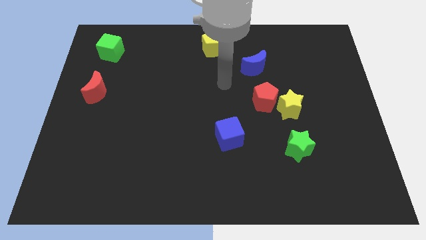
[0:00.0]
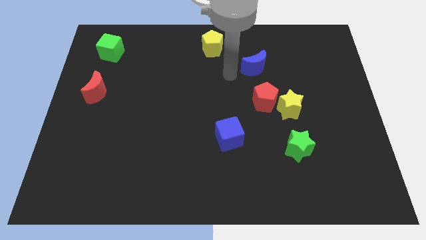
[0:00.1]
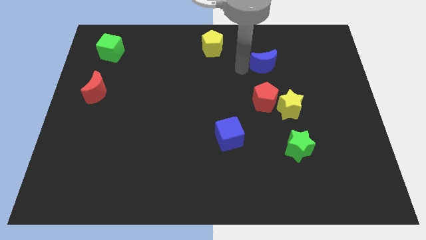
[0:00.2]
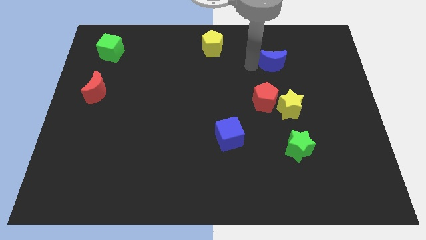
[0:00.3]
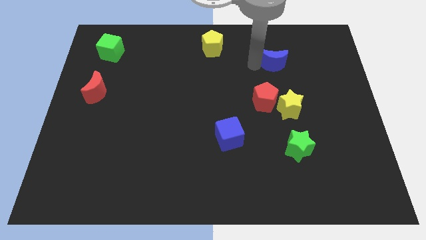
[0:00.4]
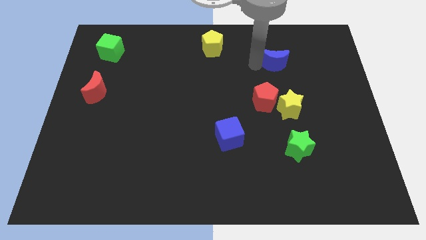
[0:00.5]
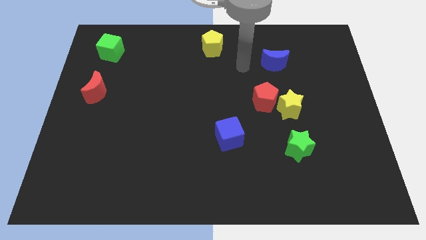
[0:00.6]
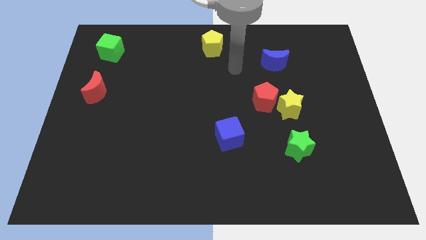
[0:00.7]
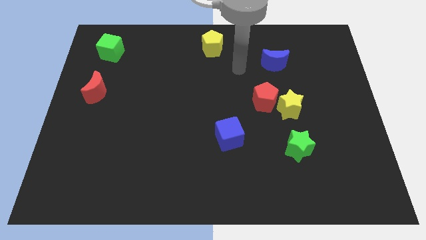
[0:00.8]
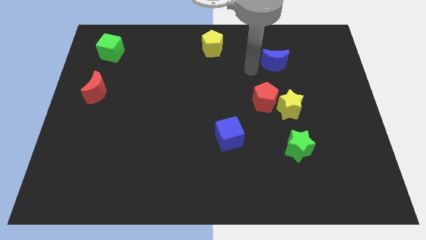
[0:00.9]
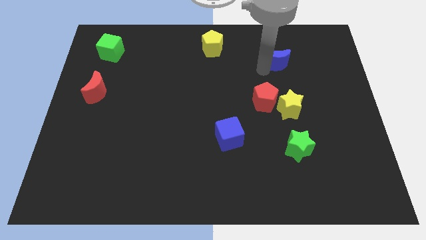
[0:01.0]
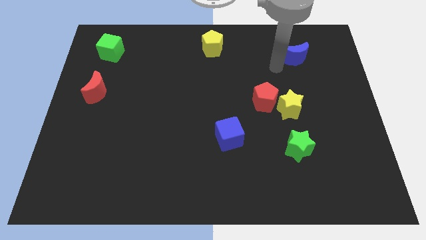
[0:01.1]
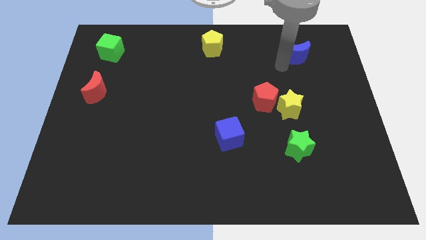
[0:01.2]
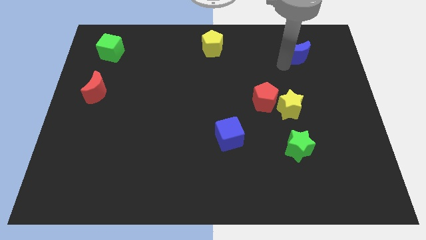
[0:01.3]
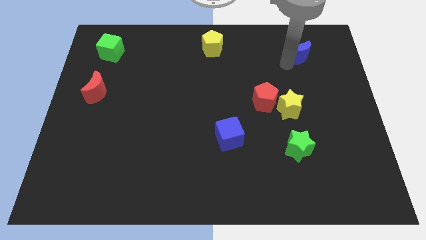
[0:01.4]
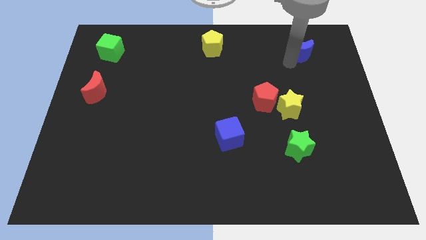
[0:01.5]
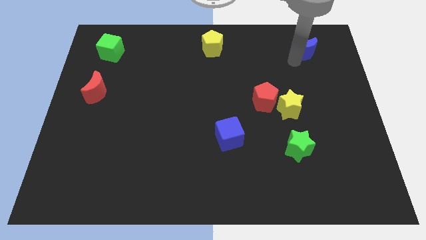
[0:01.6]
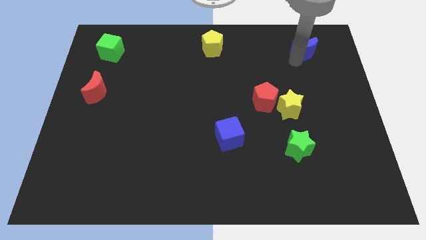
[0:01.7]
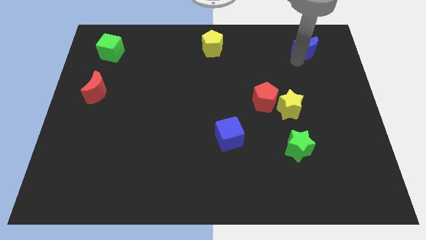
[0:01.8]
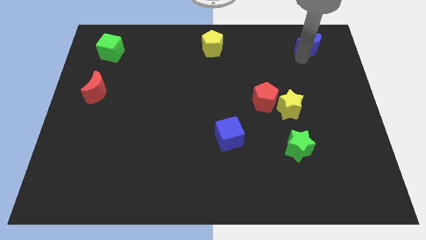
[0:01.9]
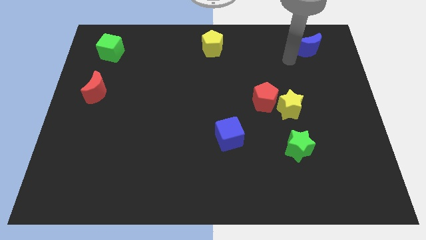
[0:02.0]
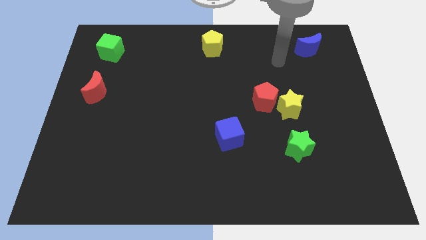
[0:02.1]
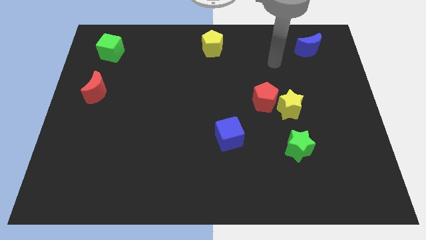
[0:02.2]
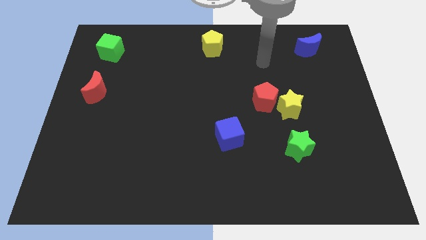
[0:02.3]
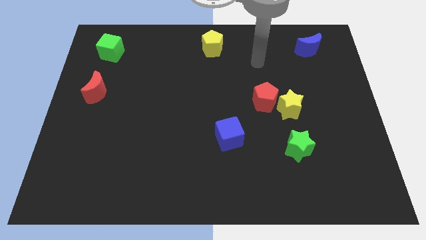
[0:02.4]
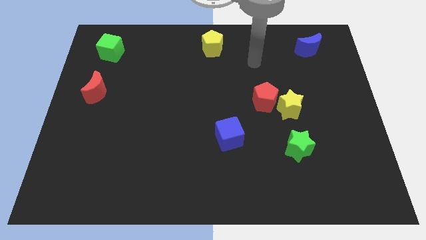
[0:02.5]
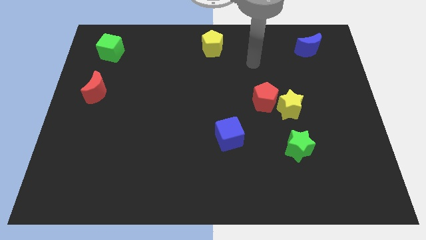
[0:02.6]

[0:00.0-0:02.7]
move blue cube towards top right of the board

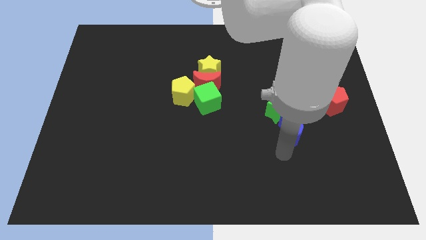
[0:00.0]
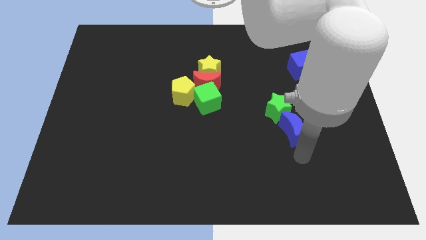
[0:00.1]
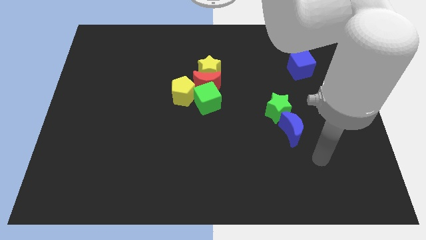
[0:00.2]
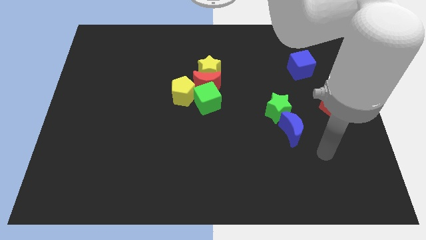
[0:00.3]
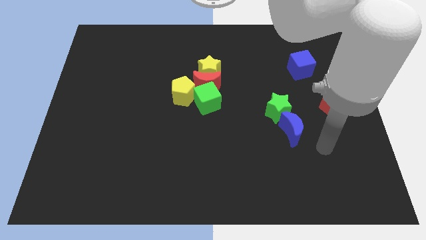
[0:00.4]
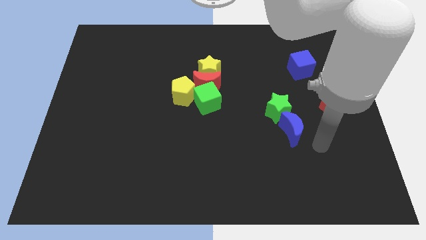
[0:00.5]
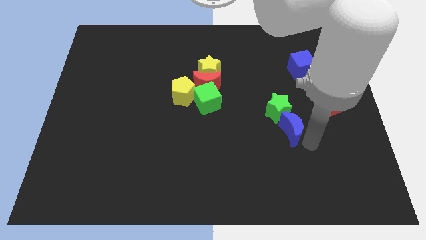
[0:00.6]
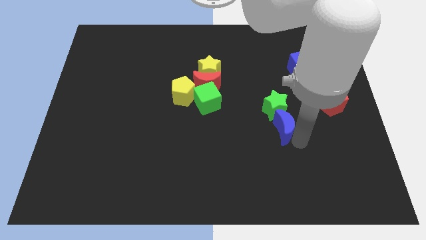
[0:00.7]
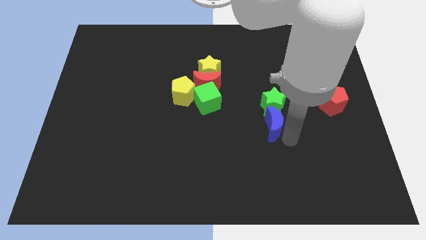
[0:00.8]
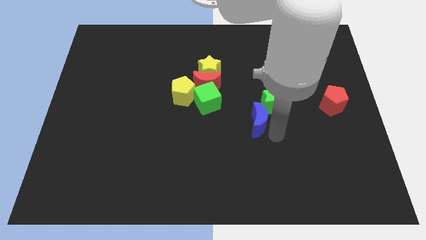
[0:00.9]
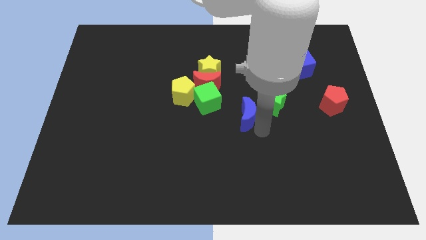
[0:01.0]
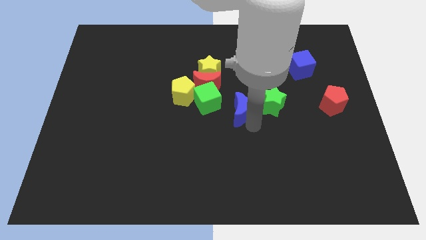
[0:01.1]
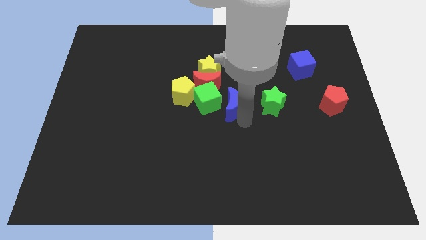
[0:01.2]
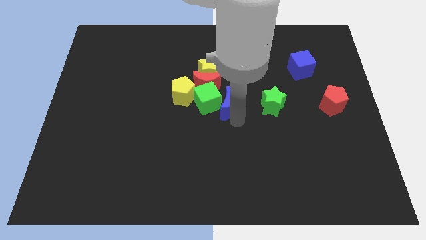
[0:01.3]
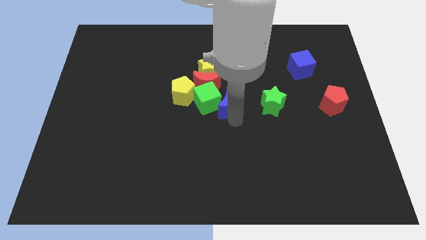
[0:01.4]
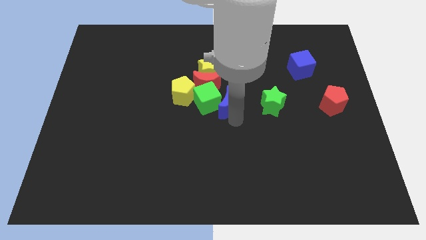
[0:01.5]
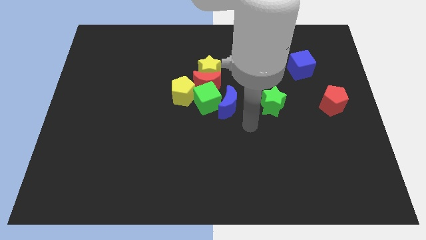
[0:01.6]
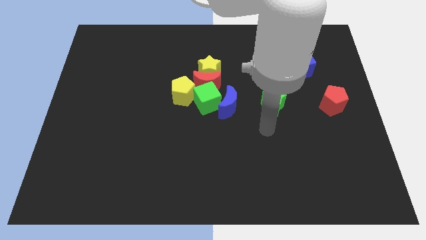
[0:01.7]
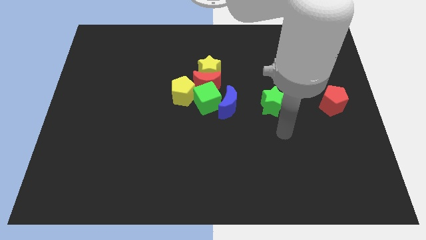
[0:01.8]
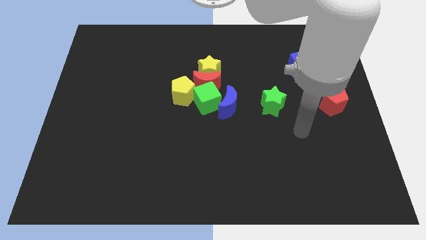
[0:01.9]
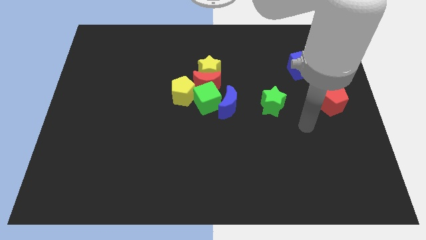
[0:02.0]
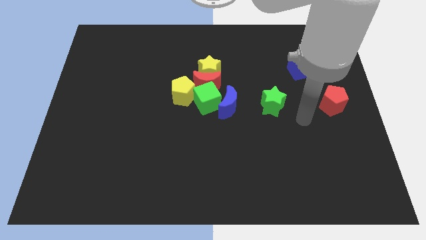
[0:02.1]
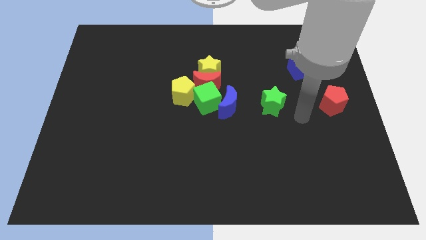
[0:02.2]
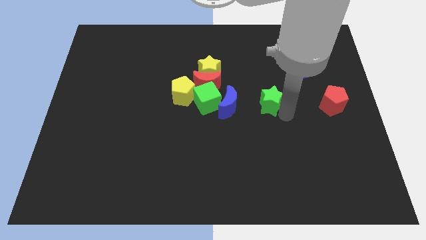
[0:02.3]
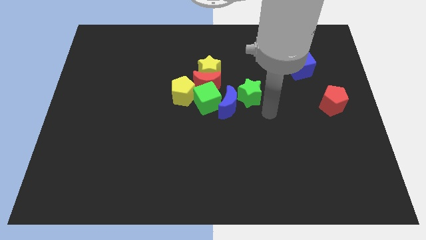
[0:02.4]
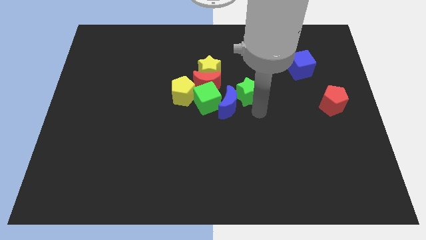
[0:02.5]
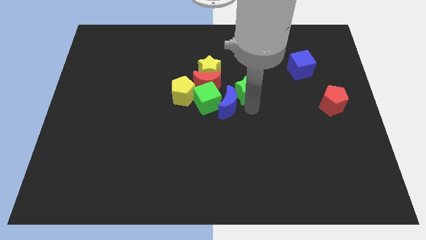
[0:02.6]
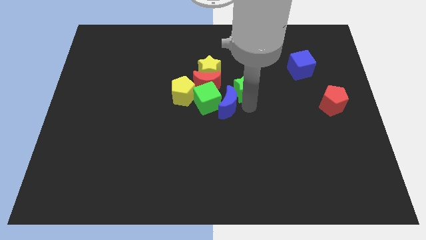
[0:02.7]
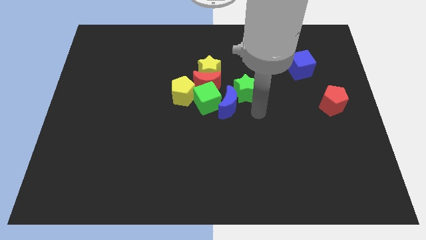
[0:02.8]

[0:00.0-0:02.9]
place green star near blue crescent

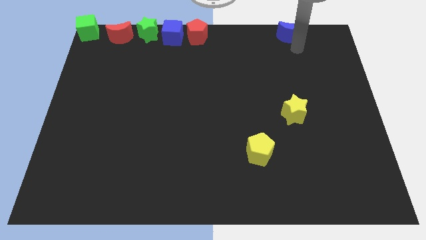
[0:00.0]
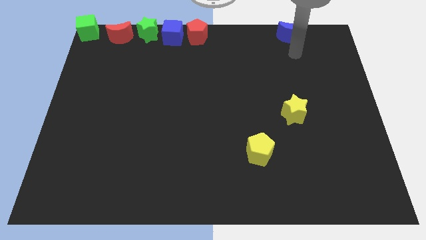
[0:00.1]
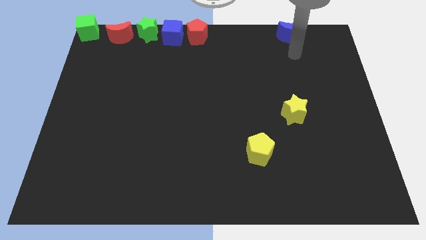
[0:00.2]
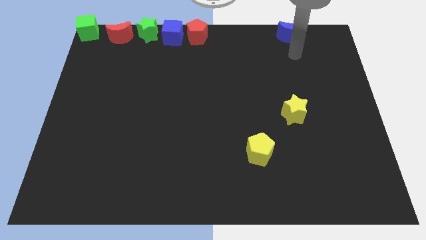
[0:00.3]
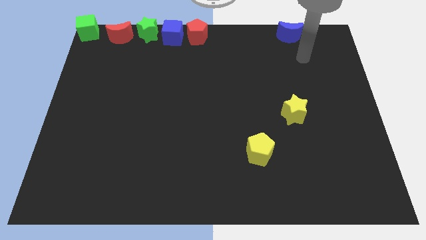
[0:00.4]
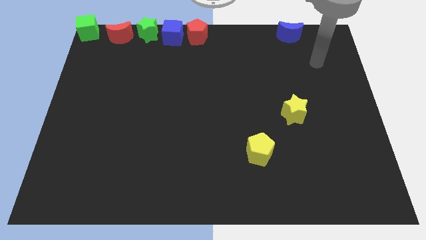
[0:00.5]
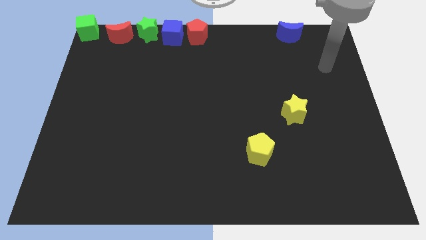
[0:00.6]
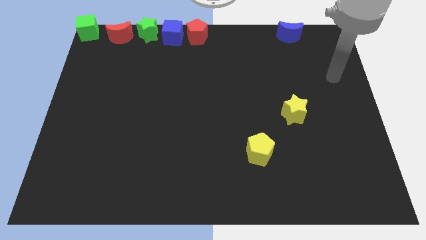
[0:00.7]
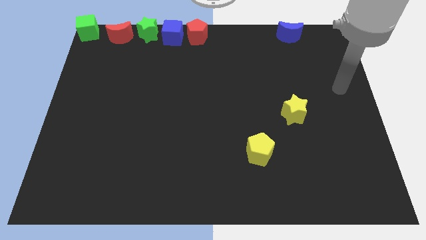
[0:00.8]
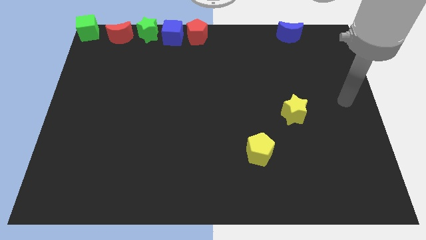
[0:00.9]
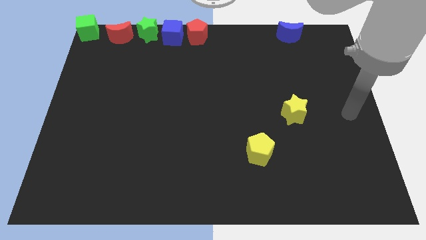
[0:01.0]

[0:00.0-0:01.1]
point your hand at the right side of the yellow star

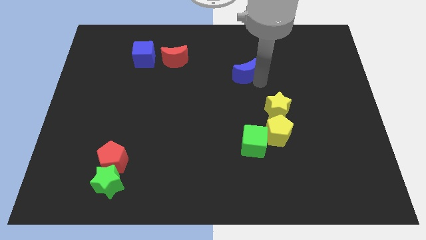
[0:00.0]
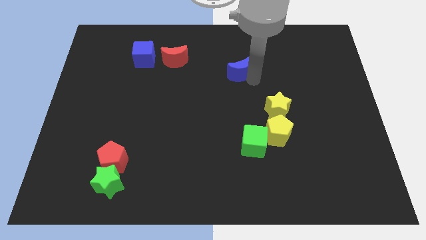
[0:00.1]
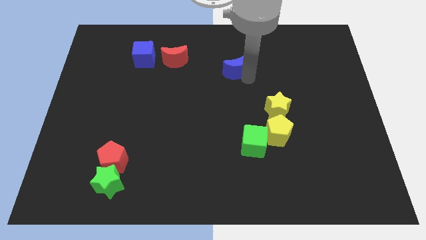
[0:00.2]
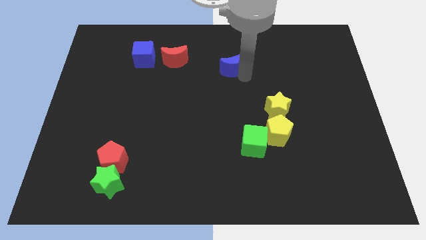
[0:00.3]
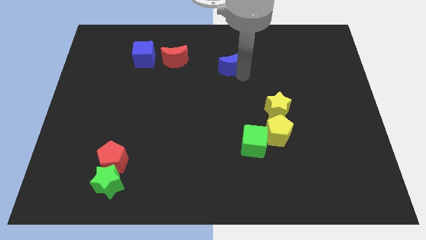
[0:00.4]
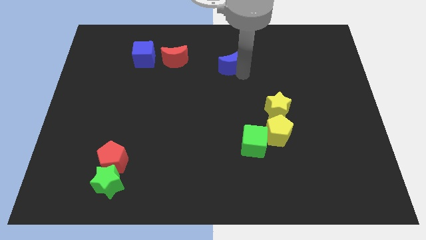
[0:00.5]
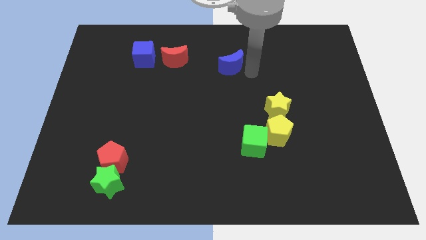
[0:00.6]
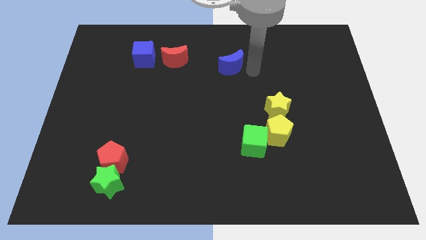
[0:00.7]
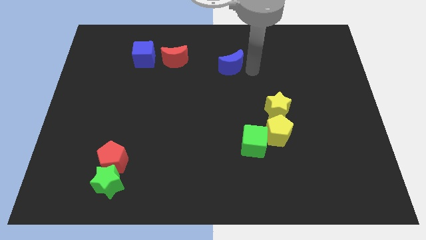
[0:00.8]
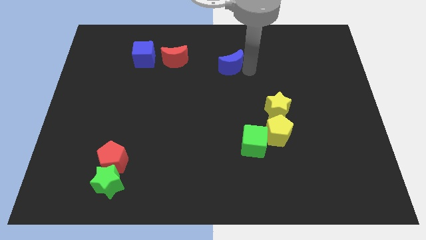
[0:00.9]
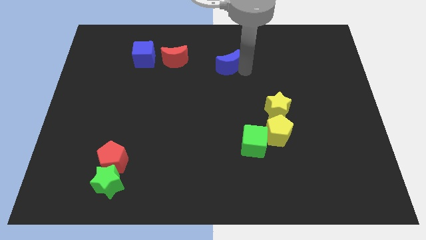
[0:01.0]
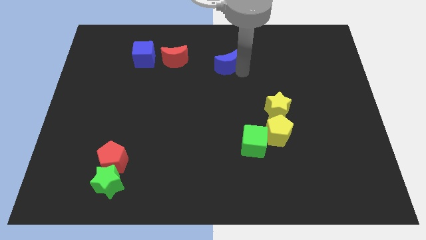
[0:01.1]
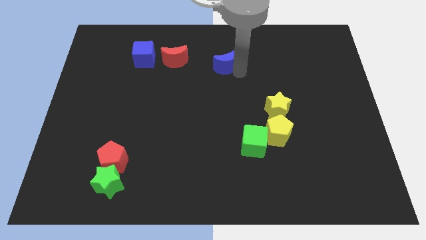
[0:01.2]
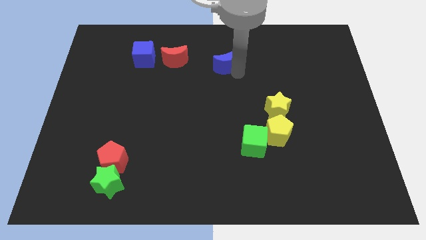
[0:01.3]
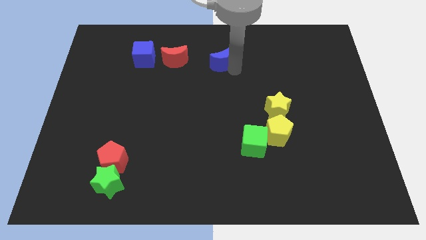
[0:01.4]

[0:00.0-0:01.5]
move blue cube towards red moon

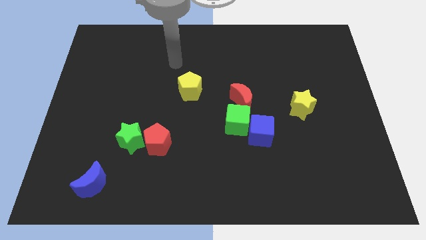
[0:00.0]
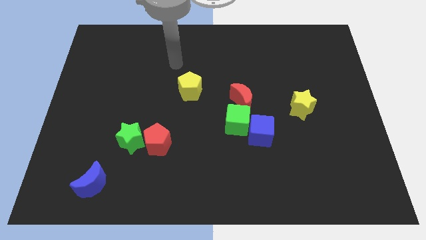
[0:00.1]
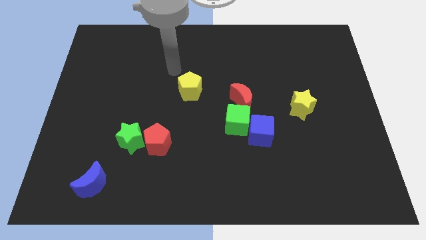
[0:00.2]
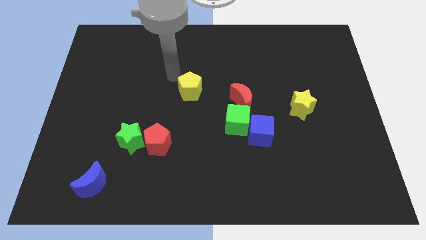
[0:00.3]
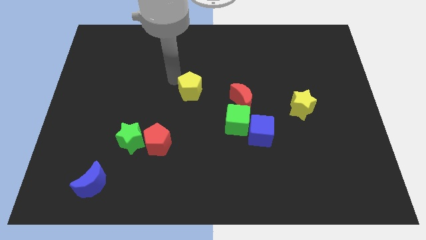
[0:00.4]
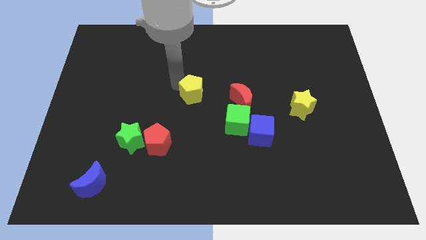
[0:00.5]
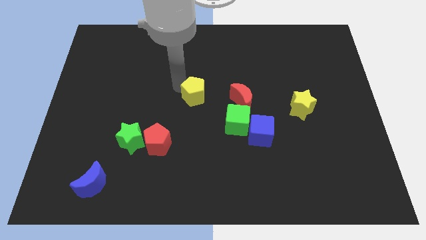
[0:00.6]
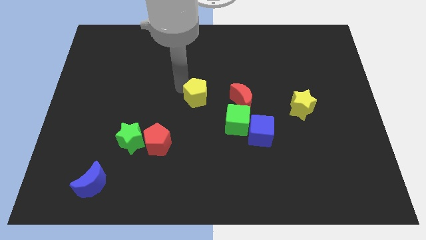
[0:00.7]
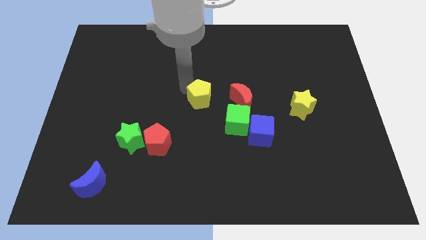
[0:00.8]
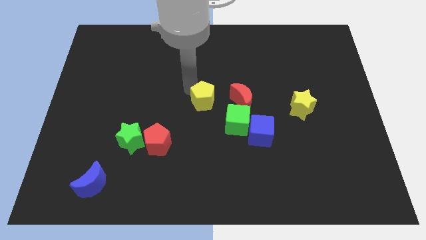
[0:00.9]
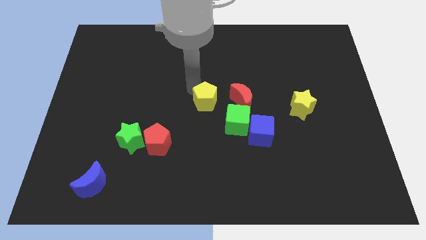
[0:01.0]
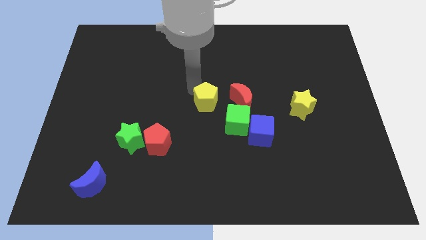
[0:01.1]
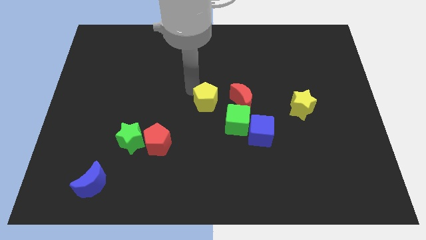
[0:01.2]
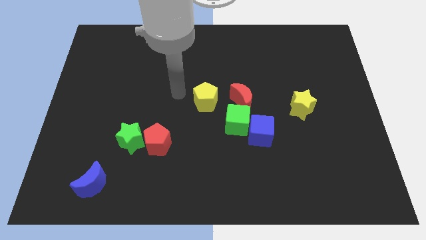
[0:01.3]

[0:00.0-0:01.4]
place the yellow pentagon left to the red moon
